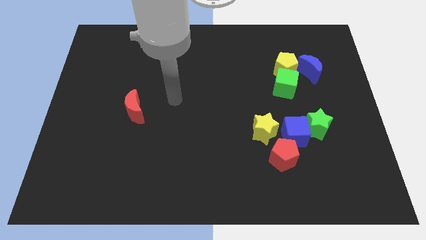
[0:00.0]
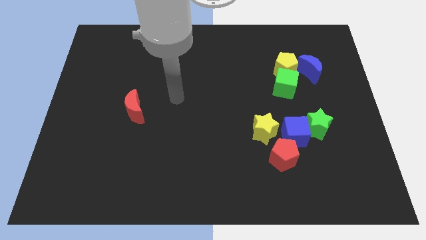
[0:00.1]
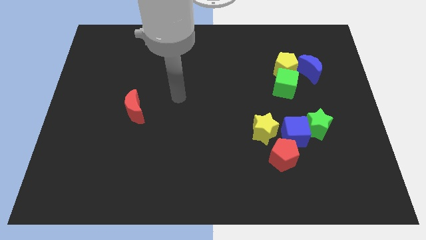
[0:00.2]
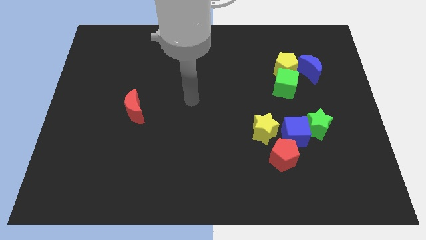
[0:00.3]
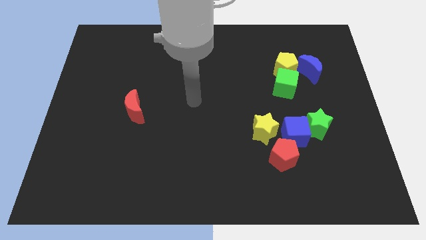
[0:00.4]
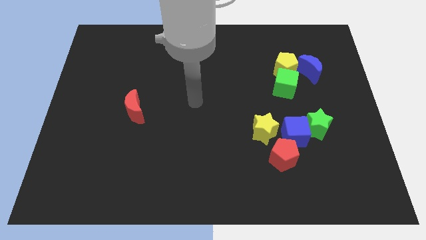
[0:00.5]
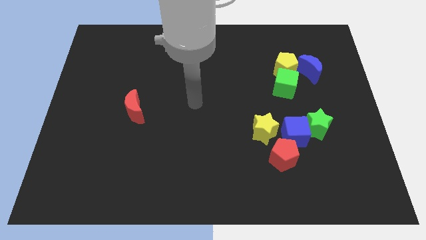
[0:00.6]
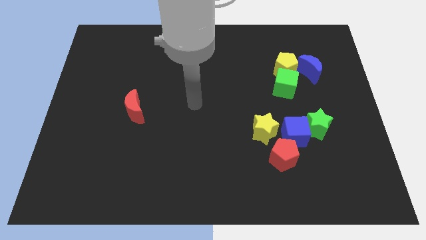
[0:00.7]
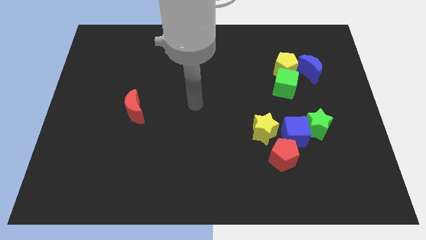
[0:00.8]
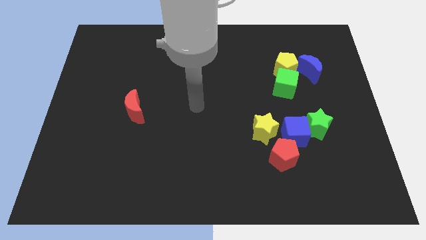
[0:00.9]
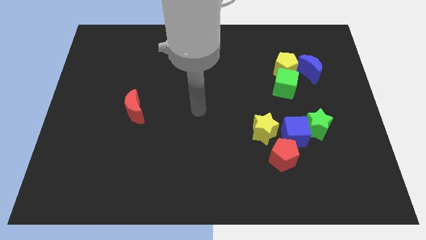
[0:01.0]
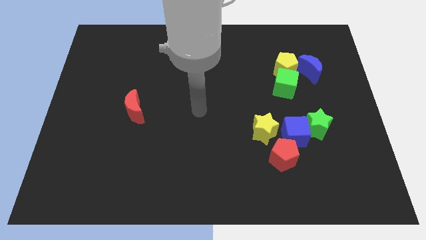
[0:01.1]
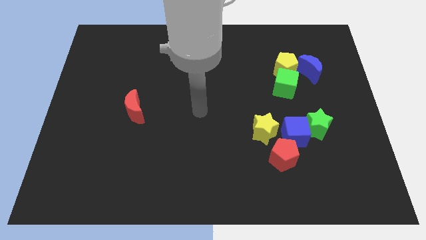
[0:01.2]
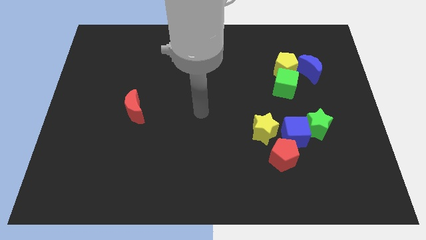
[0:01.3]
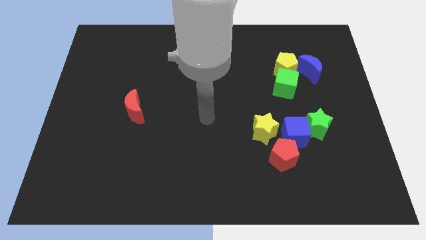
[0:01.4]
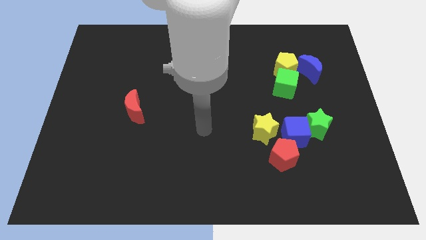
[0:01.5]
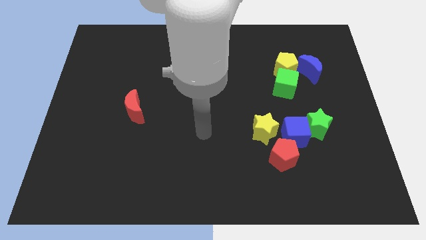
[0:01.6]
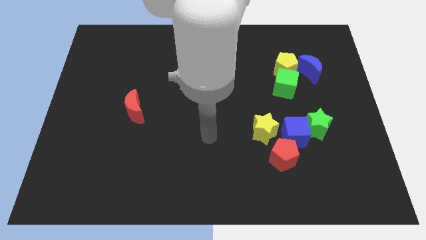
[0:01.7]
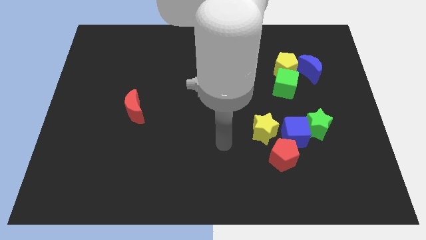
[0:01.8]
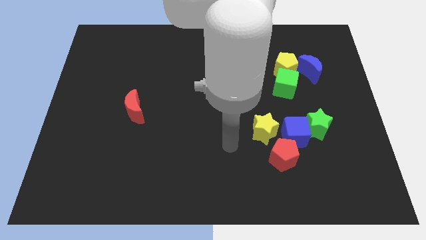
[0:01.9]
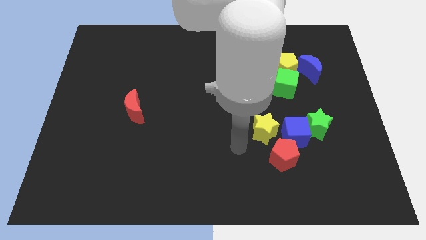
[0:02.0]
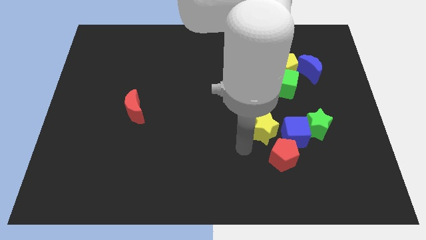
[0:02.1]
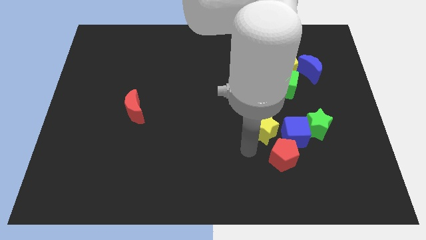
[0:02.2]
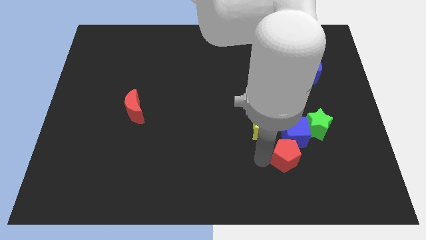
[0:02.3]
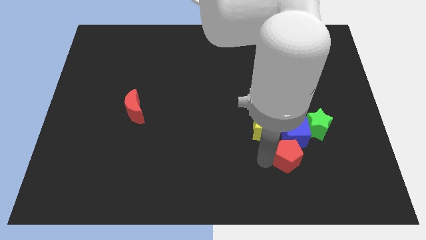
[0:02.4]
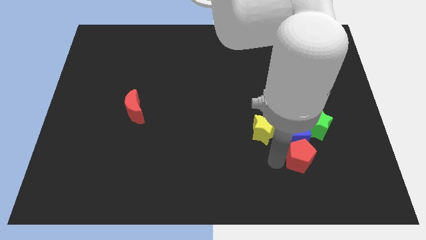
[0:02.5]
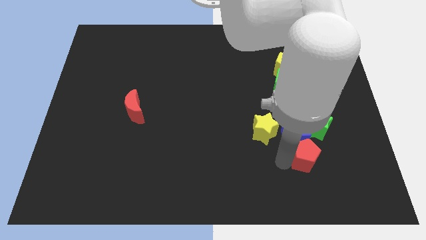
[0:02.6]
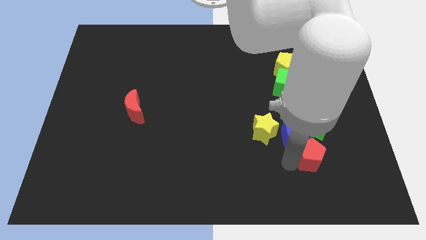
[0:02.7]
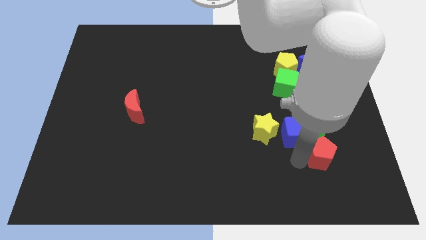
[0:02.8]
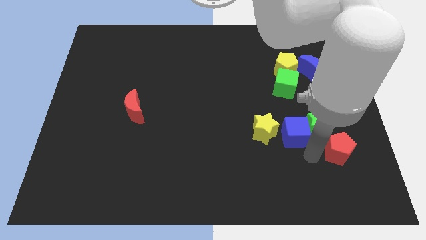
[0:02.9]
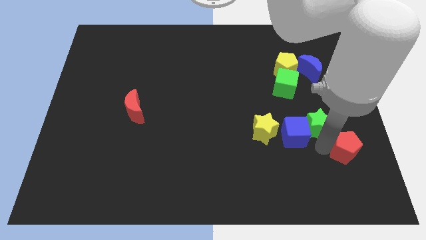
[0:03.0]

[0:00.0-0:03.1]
move the red pentagon towards center right of the board

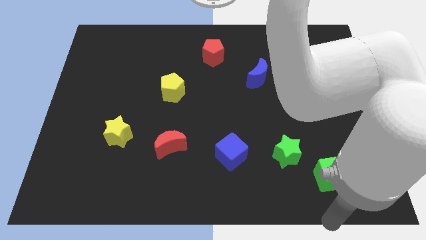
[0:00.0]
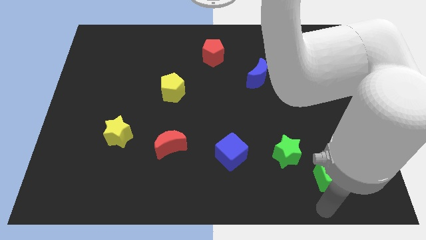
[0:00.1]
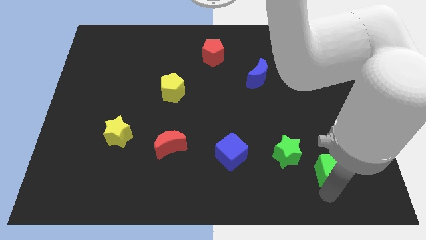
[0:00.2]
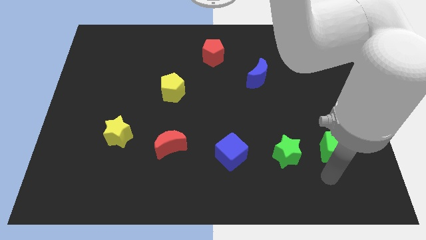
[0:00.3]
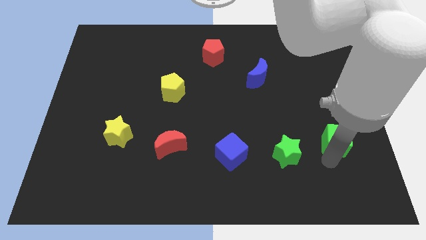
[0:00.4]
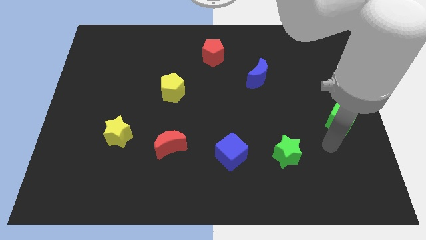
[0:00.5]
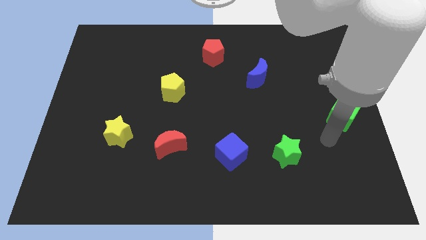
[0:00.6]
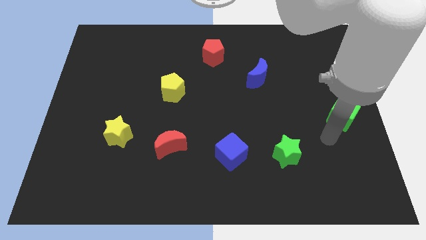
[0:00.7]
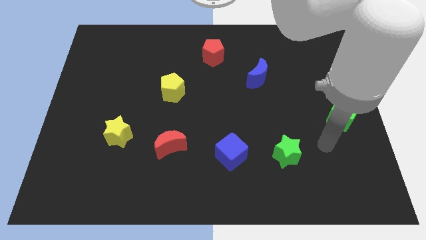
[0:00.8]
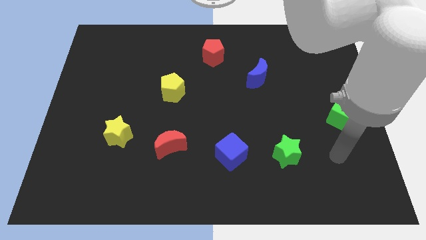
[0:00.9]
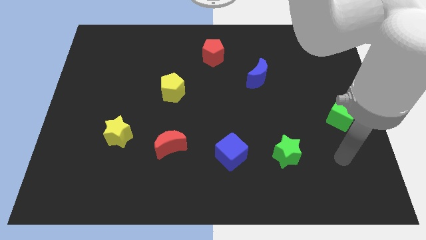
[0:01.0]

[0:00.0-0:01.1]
move the green cube towards the center right

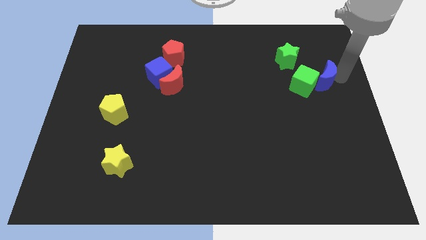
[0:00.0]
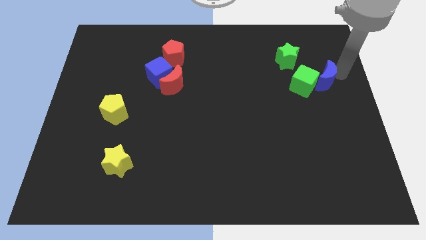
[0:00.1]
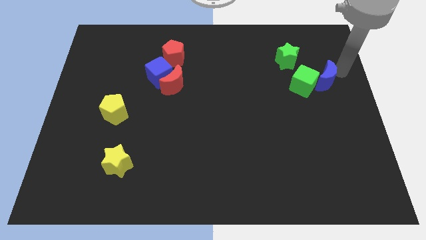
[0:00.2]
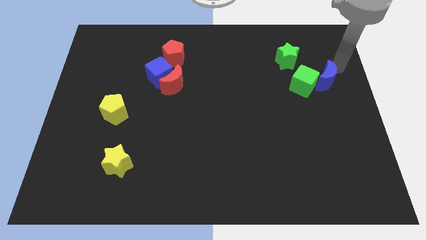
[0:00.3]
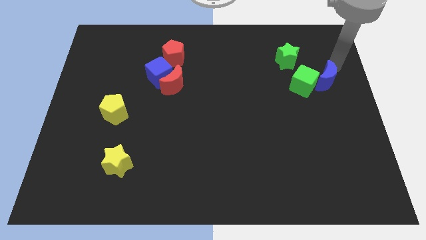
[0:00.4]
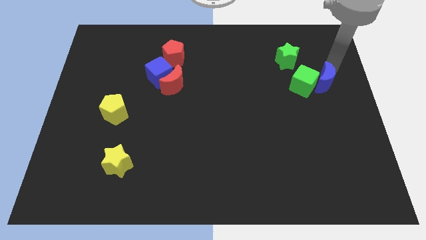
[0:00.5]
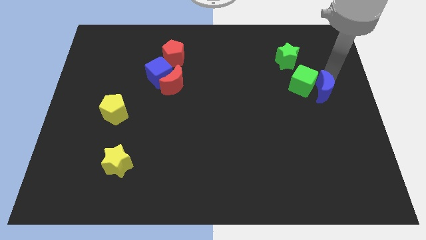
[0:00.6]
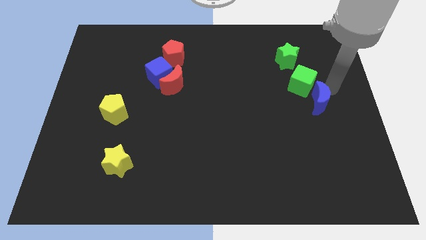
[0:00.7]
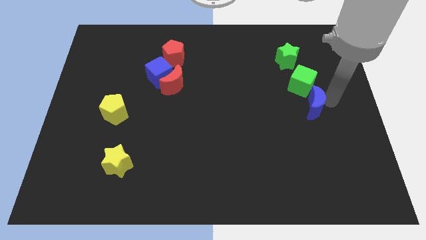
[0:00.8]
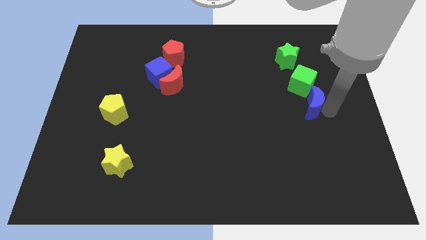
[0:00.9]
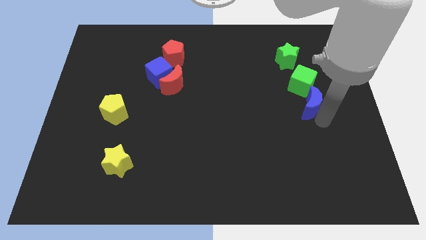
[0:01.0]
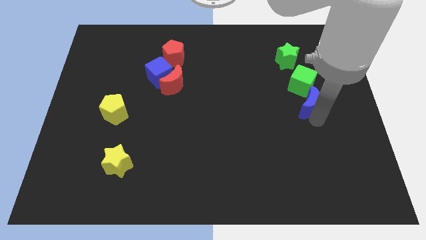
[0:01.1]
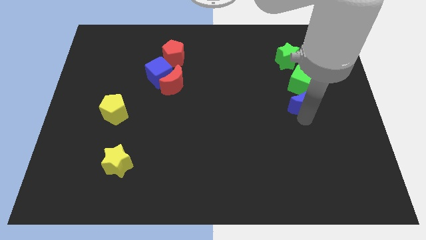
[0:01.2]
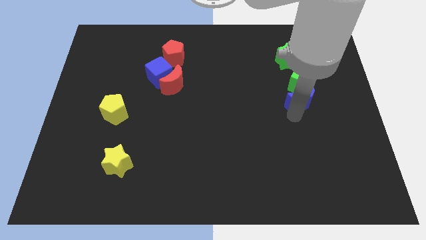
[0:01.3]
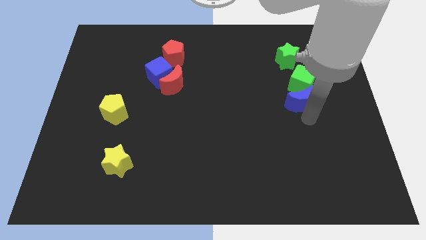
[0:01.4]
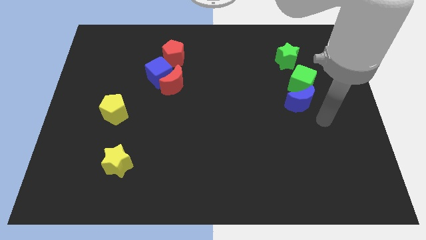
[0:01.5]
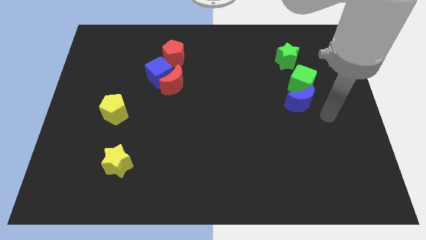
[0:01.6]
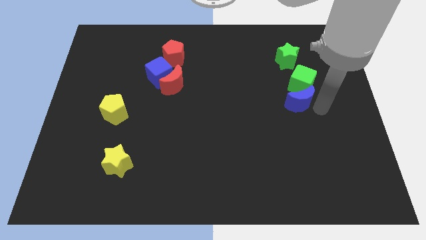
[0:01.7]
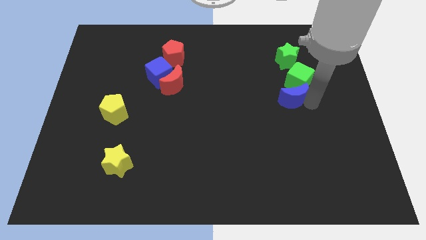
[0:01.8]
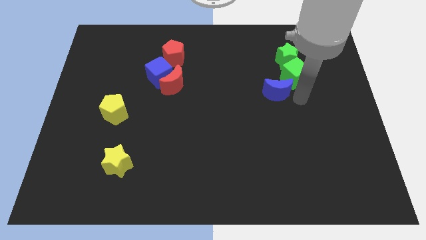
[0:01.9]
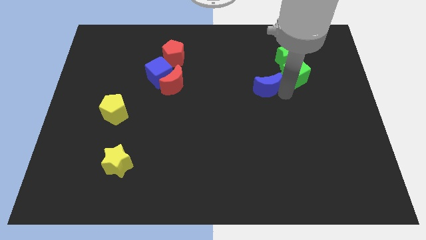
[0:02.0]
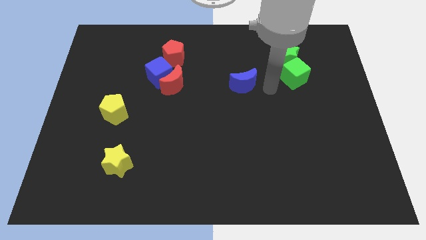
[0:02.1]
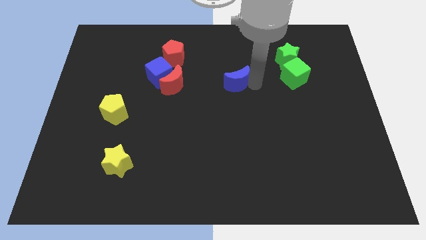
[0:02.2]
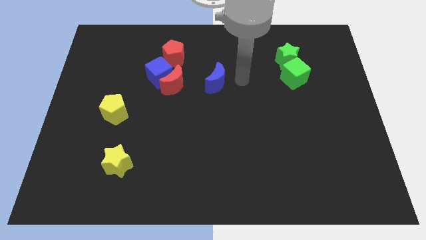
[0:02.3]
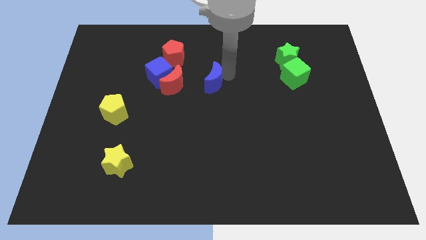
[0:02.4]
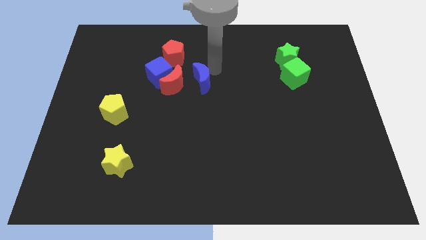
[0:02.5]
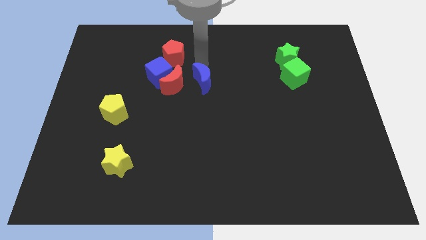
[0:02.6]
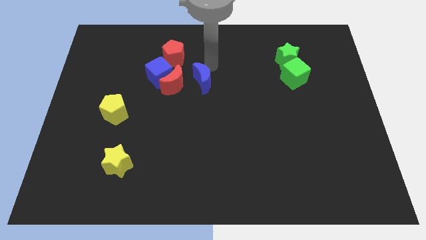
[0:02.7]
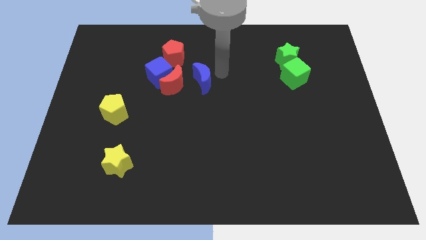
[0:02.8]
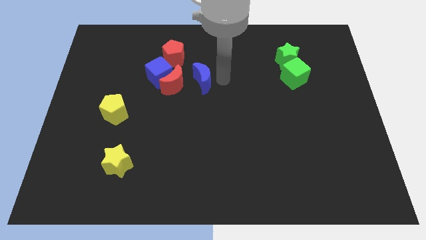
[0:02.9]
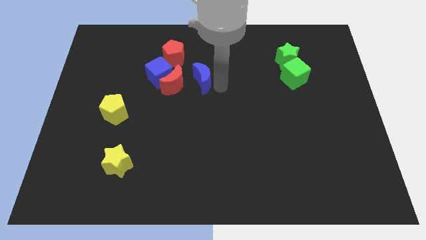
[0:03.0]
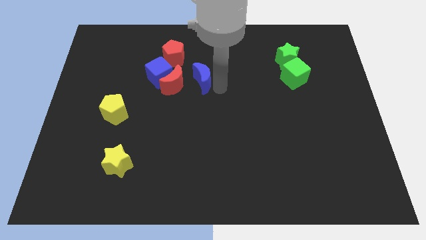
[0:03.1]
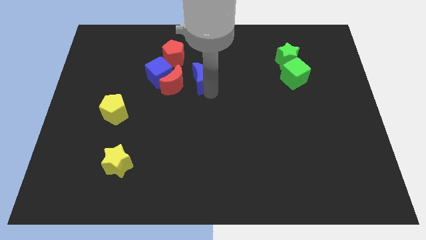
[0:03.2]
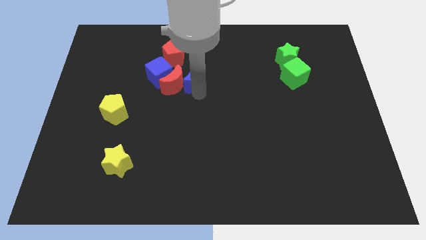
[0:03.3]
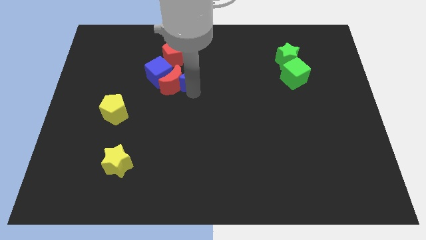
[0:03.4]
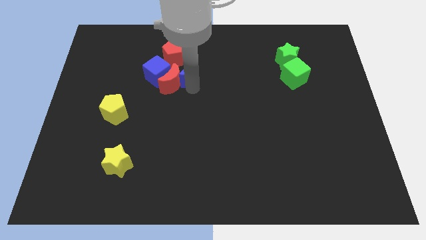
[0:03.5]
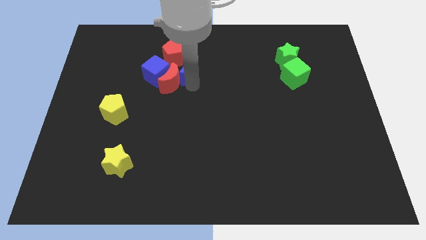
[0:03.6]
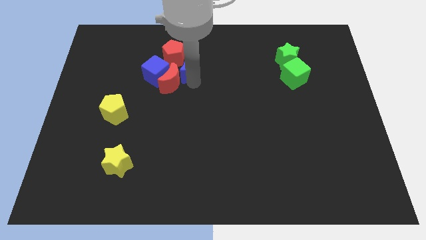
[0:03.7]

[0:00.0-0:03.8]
move blue moon into red moon

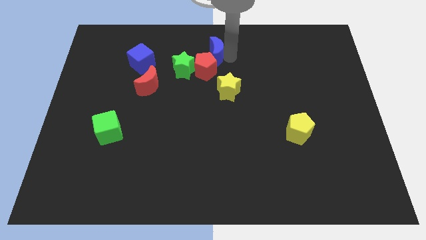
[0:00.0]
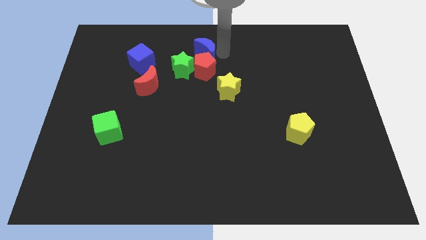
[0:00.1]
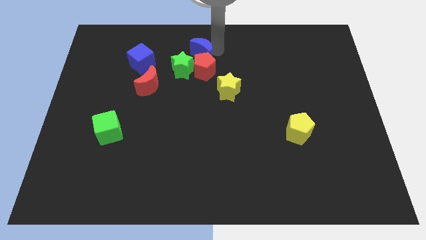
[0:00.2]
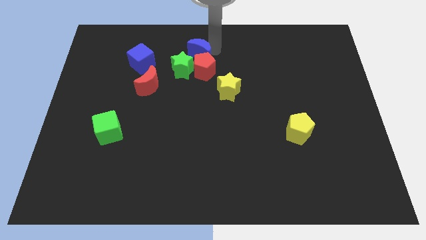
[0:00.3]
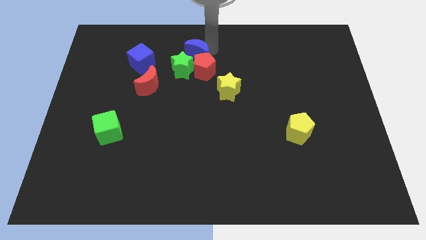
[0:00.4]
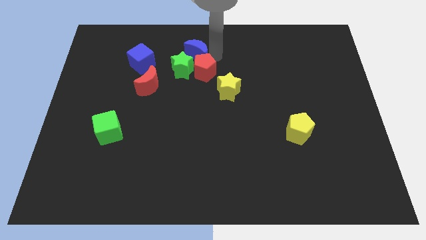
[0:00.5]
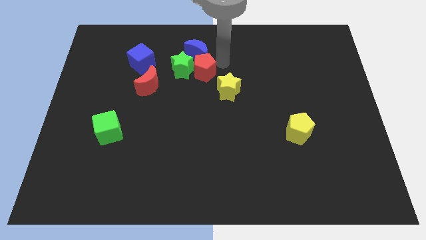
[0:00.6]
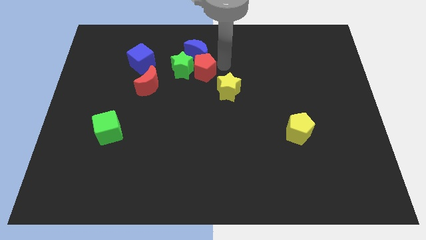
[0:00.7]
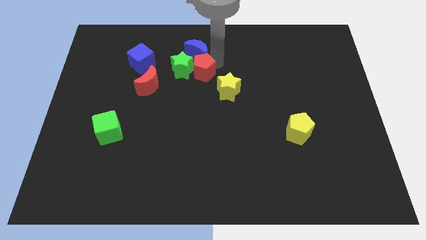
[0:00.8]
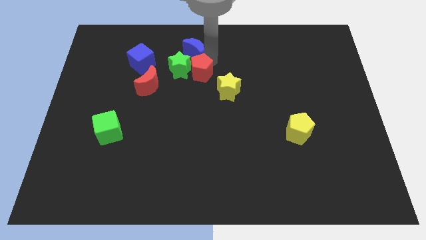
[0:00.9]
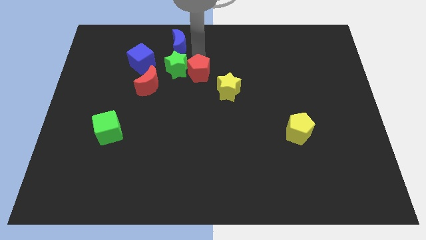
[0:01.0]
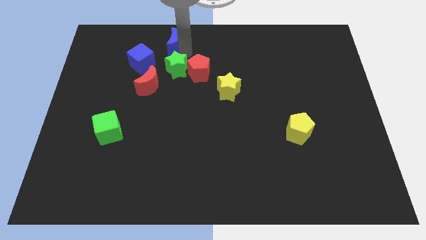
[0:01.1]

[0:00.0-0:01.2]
push the blue moon above the green star
